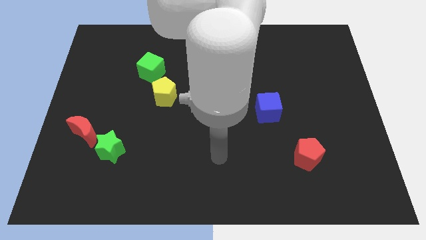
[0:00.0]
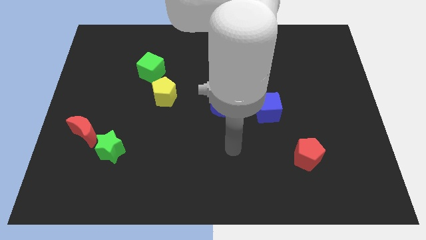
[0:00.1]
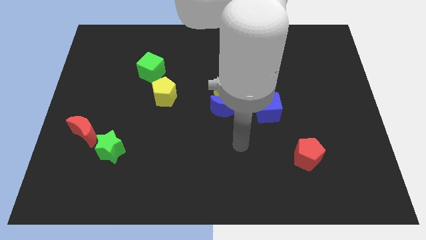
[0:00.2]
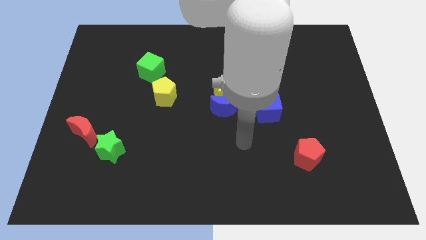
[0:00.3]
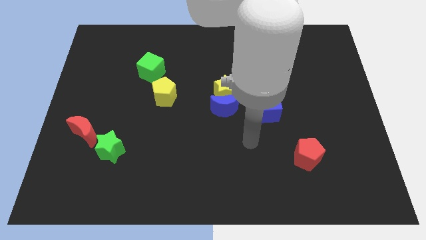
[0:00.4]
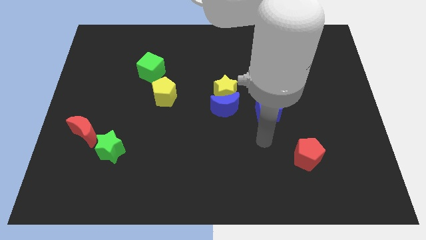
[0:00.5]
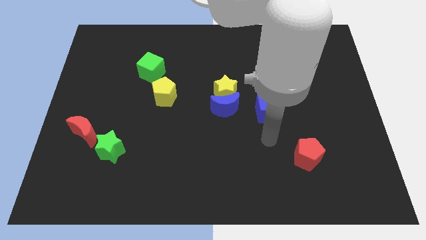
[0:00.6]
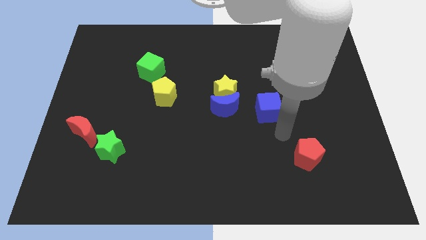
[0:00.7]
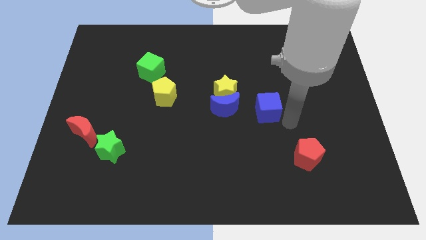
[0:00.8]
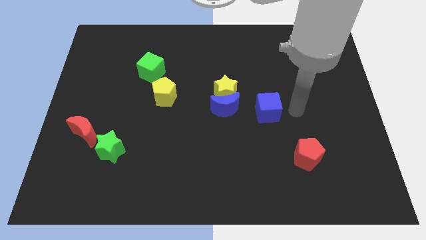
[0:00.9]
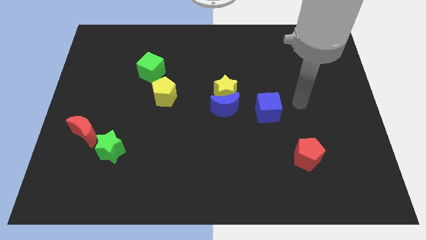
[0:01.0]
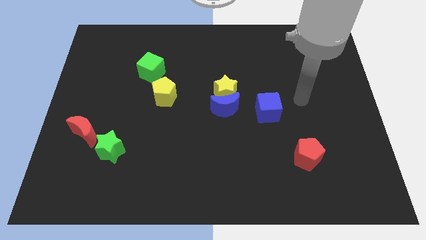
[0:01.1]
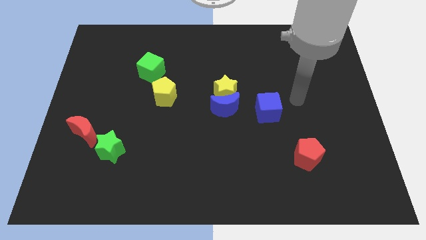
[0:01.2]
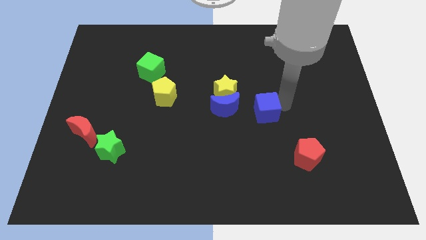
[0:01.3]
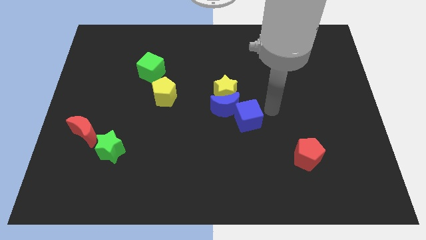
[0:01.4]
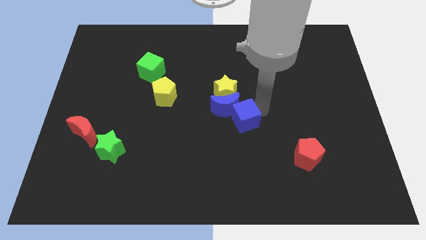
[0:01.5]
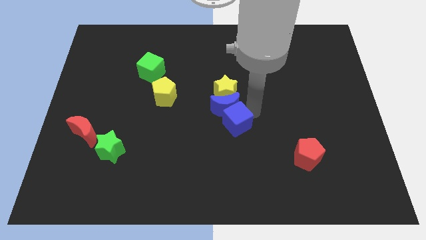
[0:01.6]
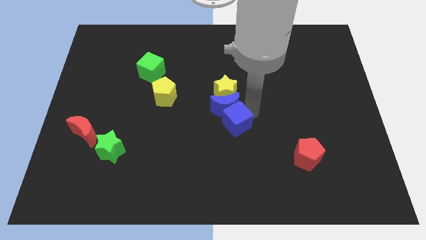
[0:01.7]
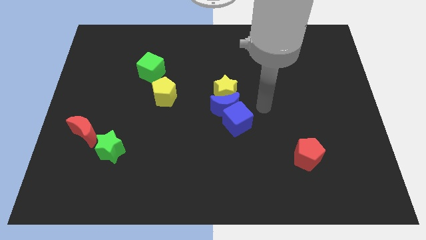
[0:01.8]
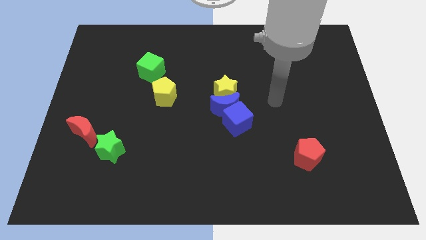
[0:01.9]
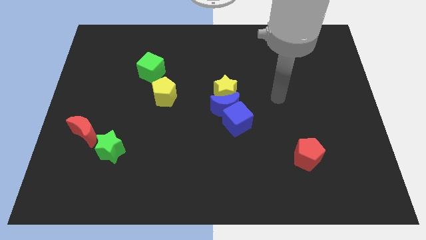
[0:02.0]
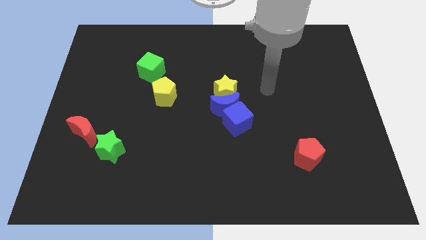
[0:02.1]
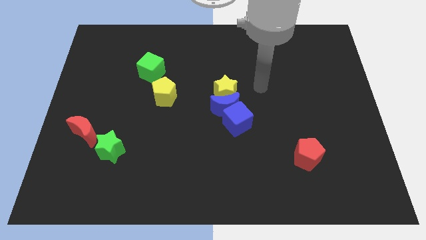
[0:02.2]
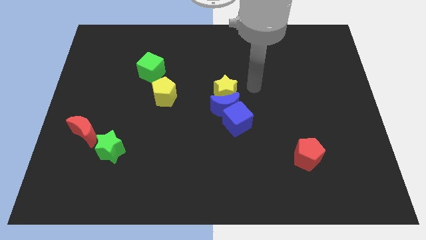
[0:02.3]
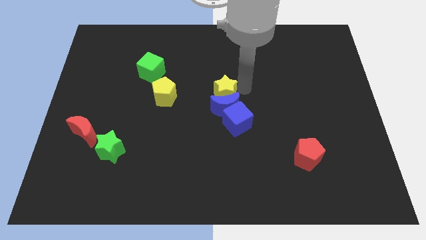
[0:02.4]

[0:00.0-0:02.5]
push the blue cube to bottom of the blue moon

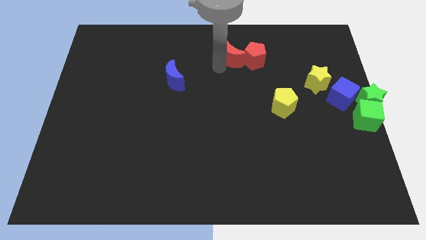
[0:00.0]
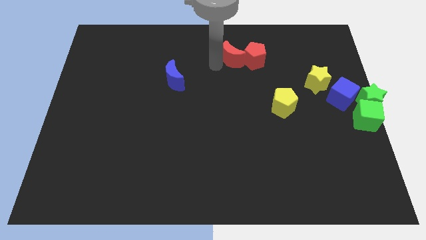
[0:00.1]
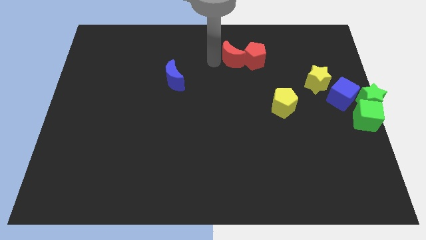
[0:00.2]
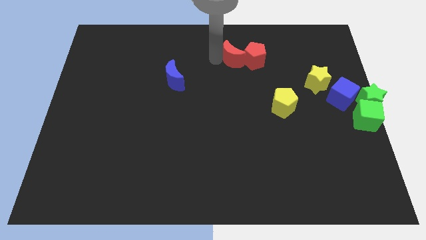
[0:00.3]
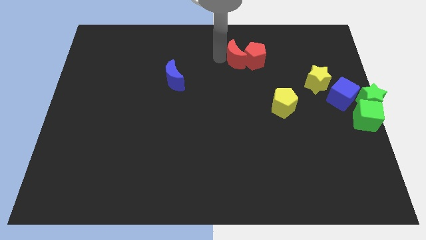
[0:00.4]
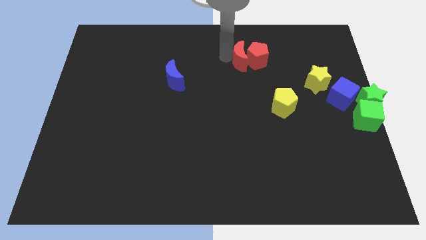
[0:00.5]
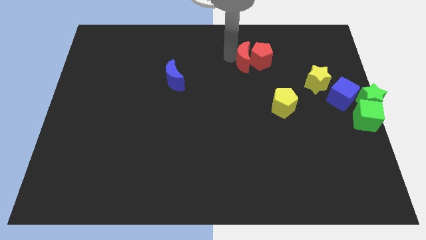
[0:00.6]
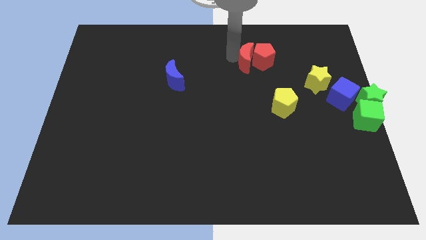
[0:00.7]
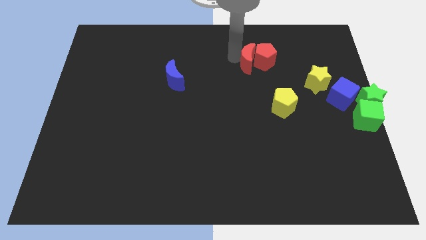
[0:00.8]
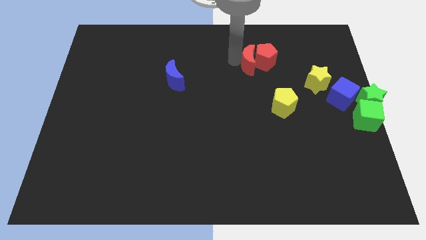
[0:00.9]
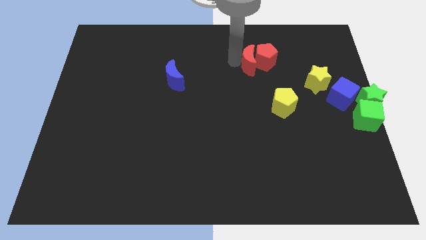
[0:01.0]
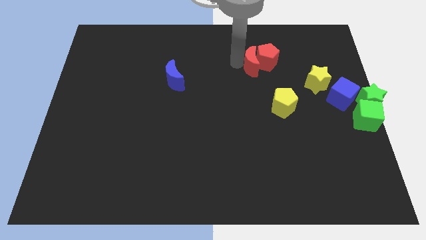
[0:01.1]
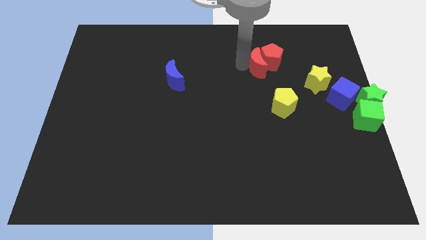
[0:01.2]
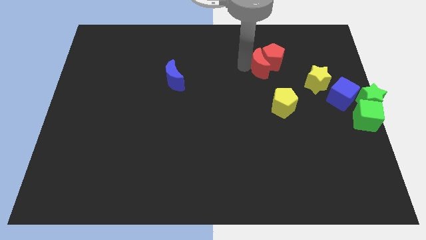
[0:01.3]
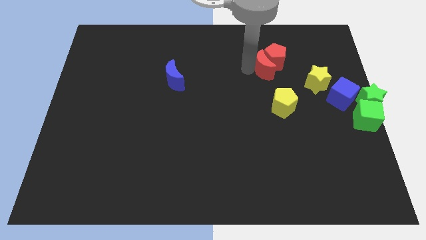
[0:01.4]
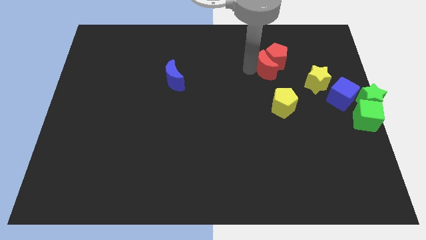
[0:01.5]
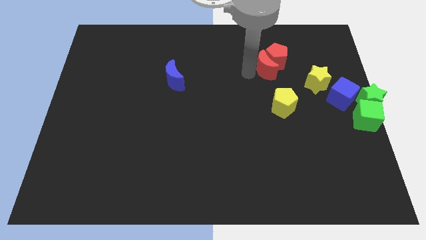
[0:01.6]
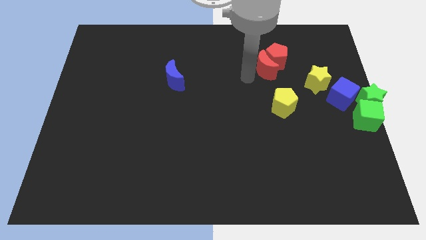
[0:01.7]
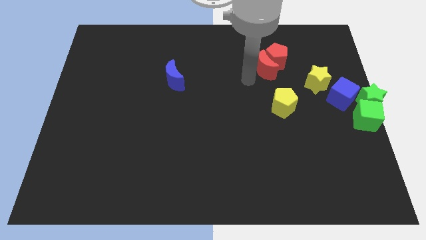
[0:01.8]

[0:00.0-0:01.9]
move the red pentagon with the red crescent slightly to the right

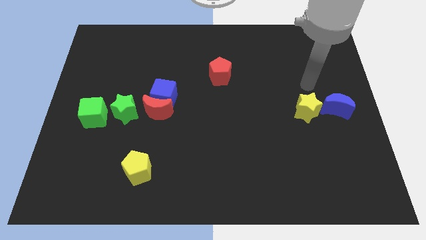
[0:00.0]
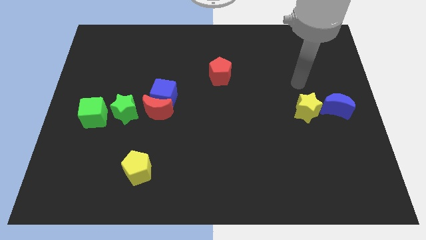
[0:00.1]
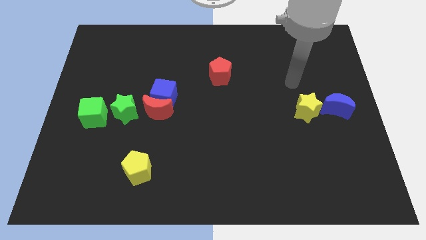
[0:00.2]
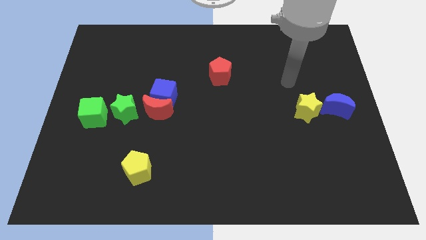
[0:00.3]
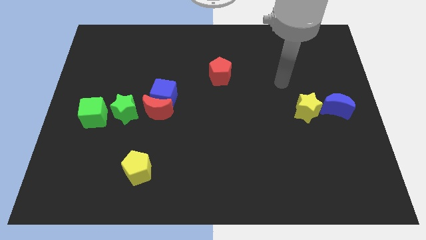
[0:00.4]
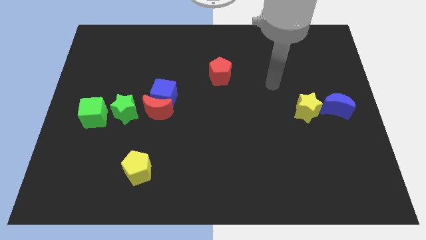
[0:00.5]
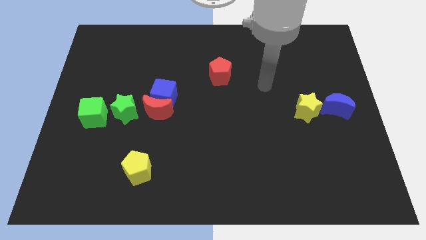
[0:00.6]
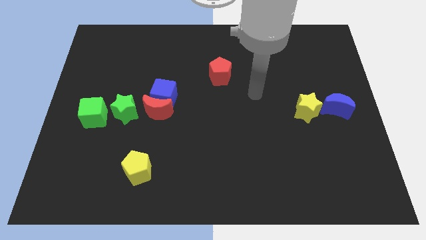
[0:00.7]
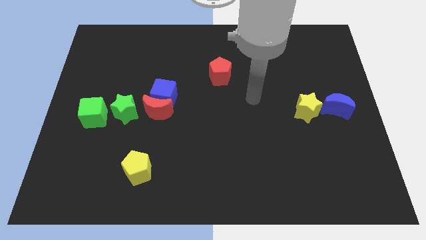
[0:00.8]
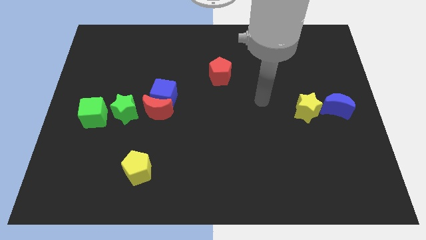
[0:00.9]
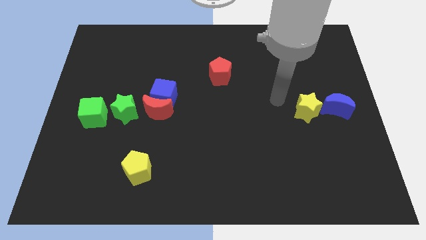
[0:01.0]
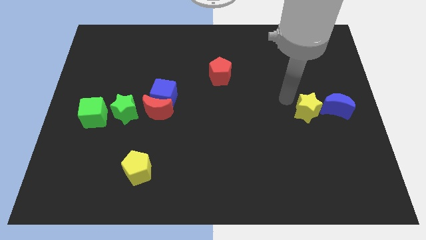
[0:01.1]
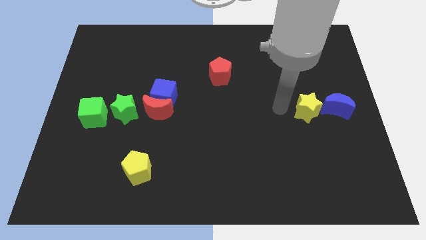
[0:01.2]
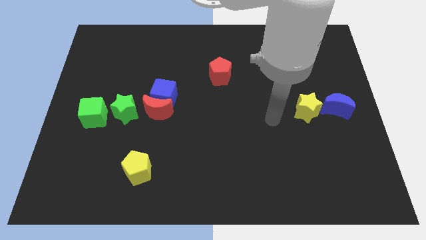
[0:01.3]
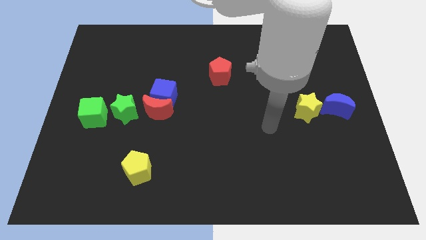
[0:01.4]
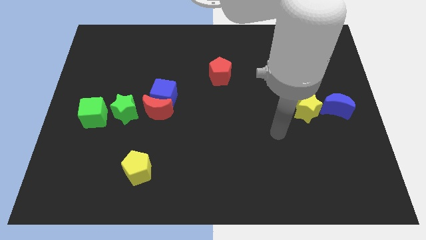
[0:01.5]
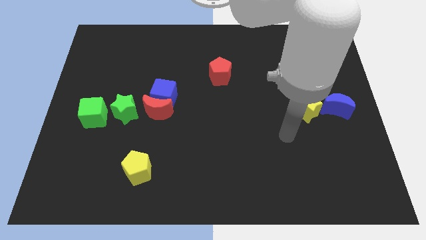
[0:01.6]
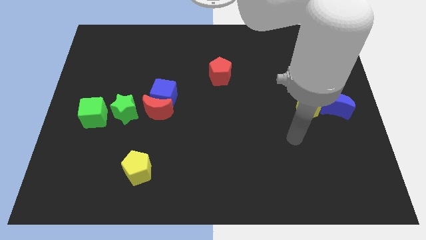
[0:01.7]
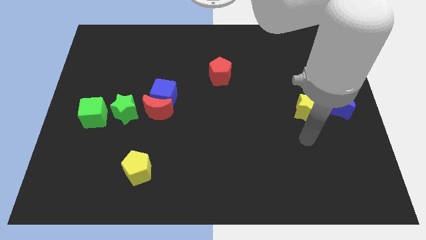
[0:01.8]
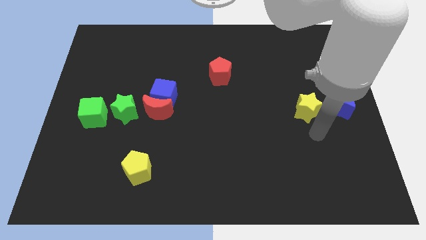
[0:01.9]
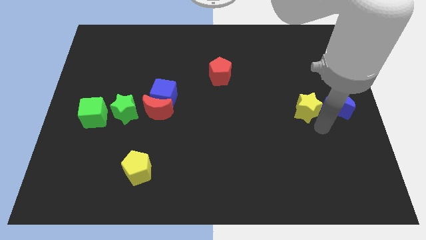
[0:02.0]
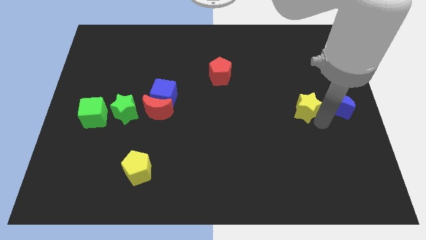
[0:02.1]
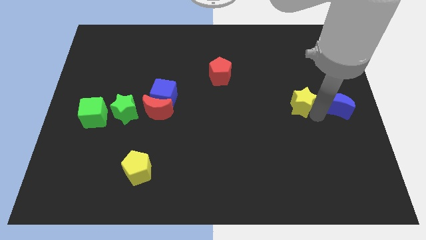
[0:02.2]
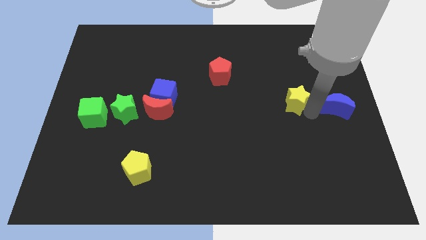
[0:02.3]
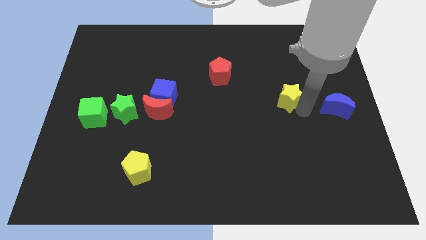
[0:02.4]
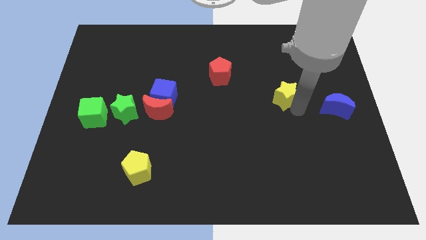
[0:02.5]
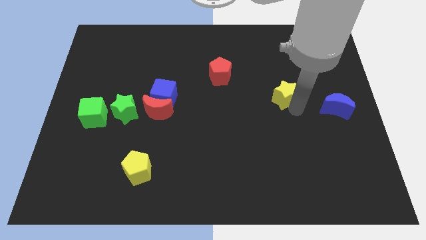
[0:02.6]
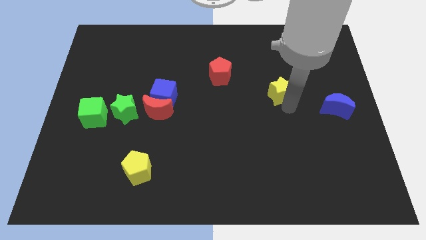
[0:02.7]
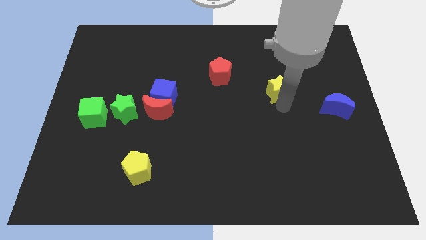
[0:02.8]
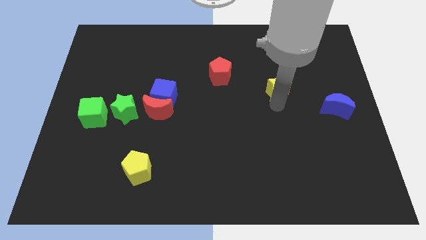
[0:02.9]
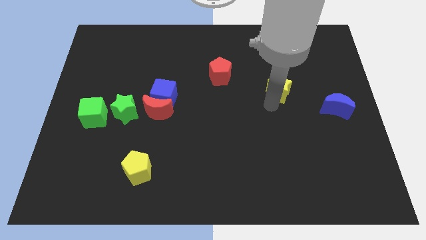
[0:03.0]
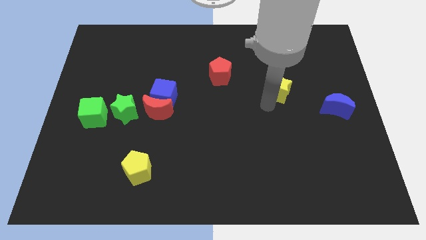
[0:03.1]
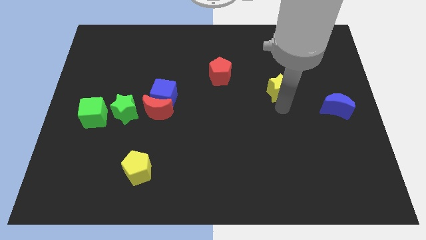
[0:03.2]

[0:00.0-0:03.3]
move the yellow star right side of the red pentagon

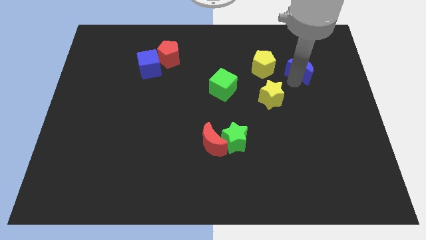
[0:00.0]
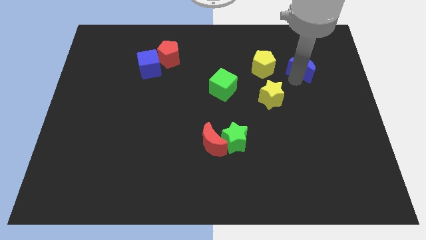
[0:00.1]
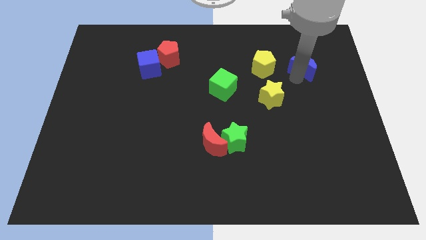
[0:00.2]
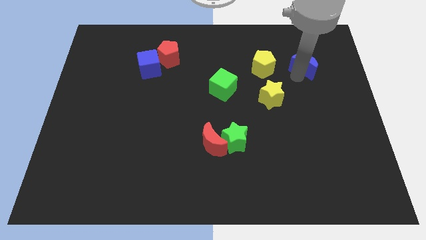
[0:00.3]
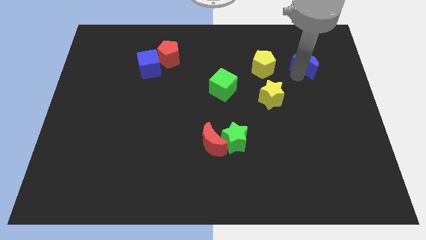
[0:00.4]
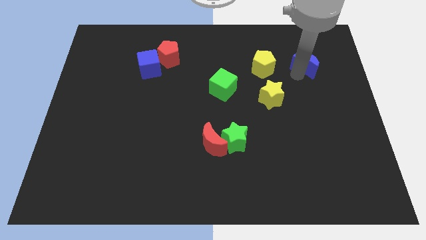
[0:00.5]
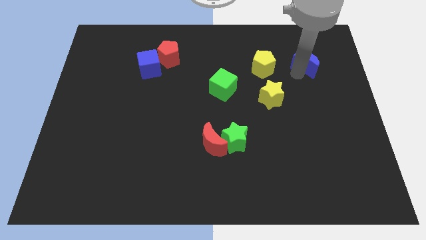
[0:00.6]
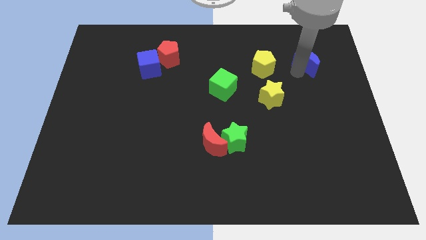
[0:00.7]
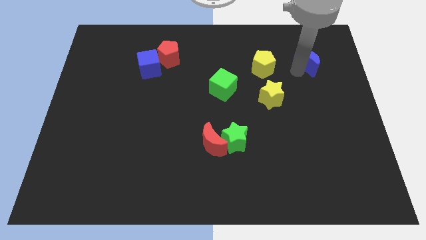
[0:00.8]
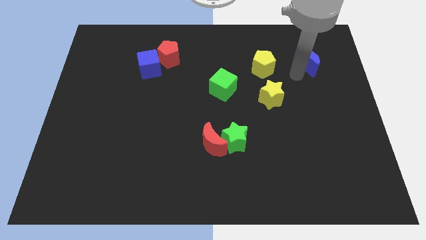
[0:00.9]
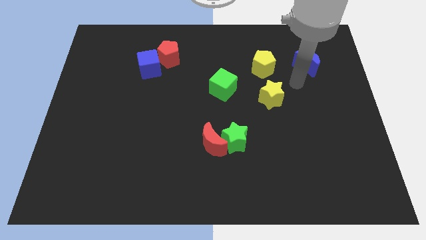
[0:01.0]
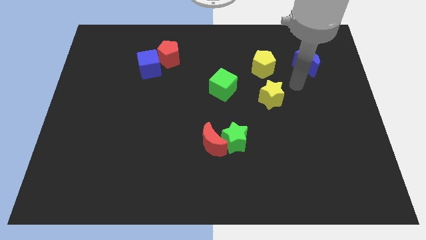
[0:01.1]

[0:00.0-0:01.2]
place the blue moon to the right of the yellow pentagon
